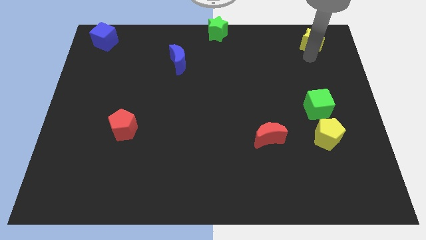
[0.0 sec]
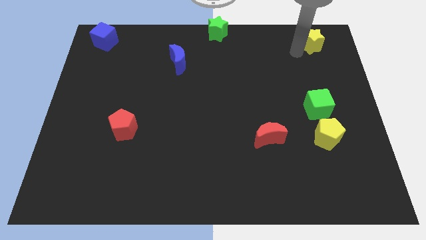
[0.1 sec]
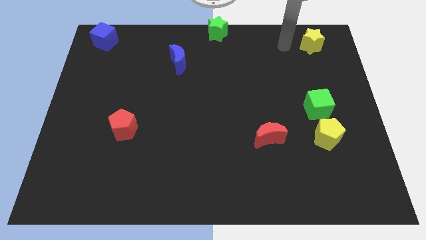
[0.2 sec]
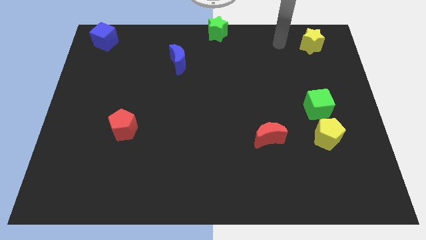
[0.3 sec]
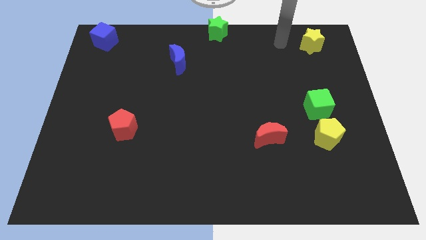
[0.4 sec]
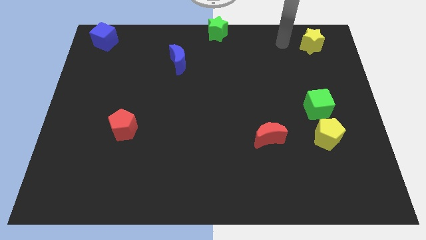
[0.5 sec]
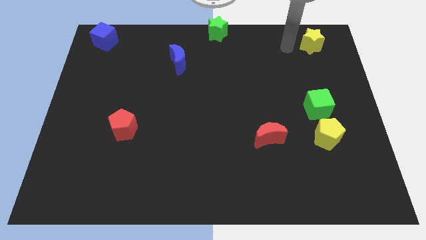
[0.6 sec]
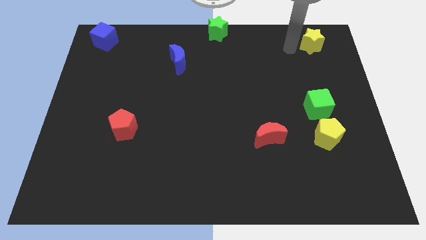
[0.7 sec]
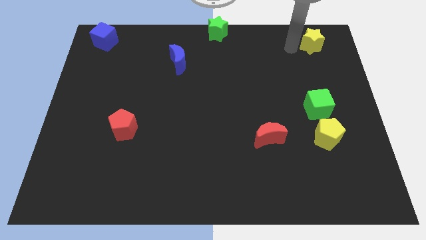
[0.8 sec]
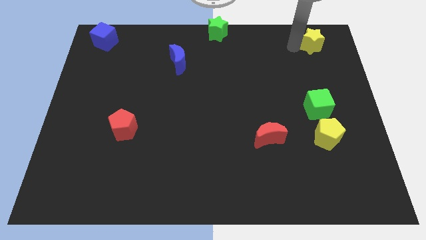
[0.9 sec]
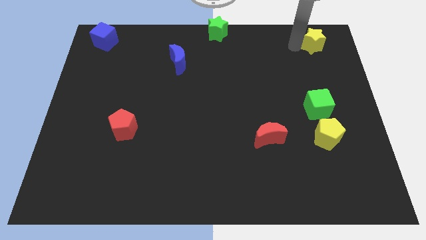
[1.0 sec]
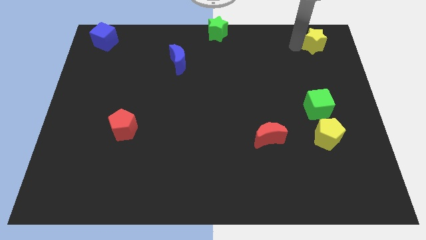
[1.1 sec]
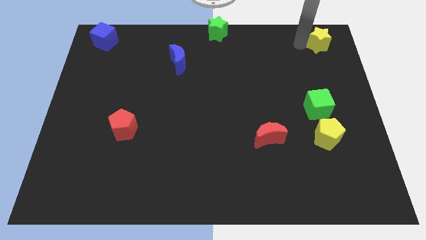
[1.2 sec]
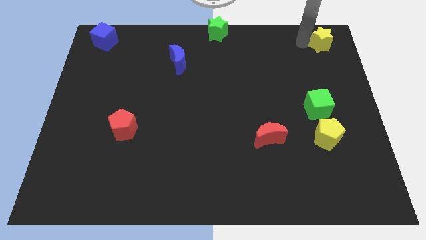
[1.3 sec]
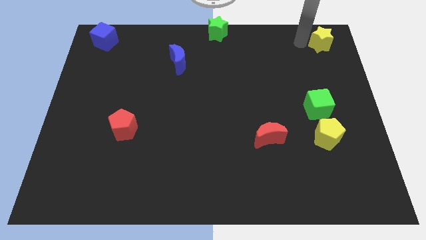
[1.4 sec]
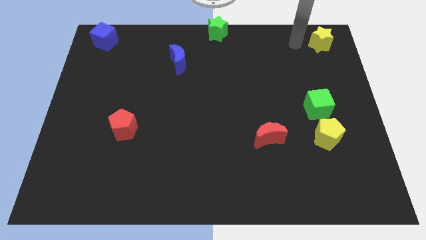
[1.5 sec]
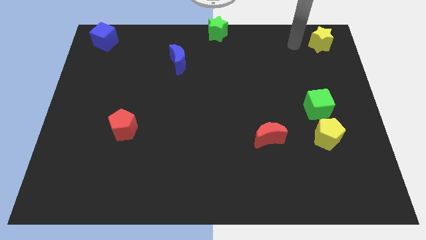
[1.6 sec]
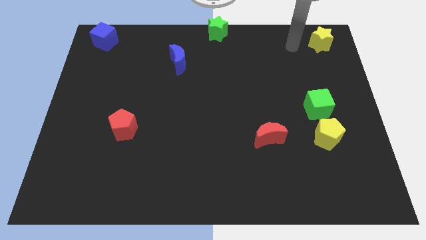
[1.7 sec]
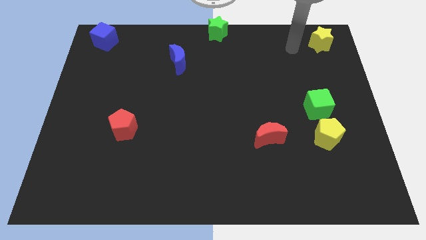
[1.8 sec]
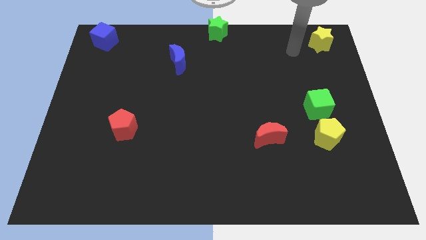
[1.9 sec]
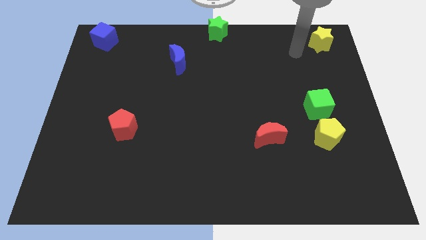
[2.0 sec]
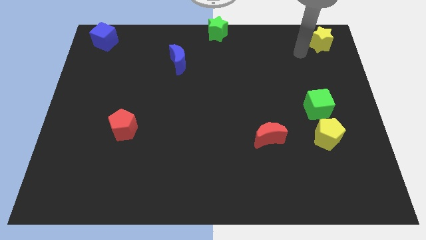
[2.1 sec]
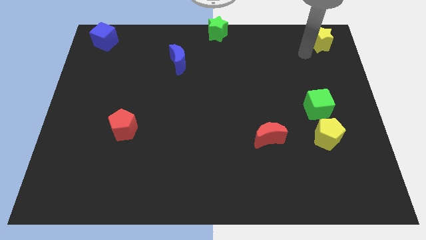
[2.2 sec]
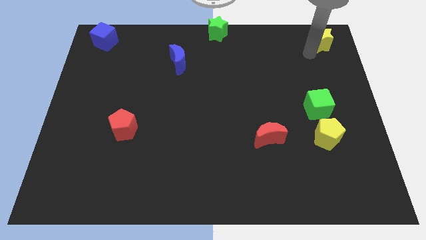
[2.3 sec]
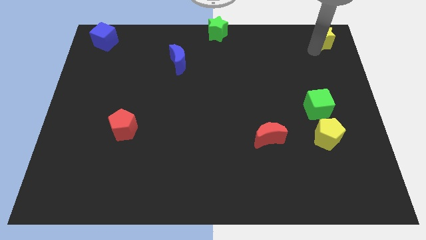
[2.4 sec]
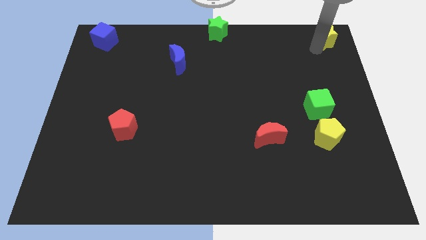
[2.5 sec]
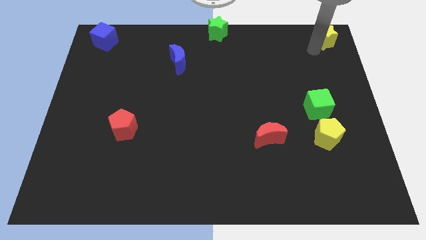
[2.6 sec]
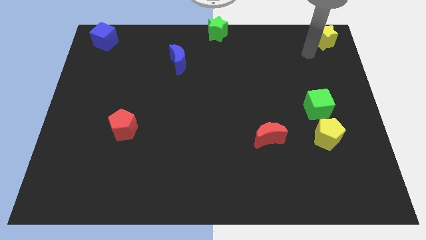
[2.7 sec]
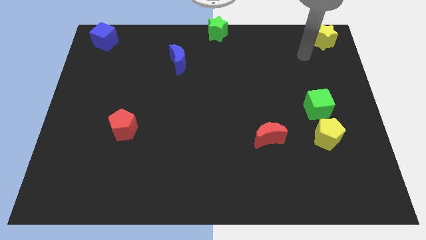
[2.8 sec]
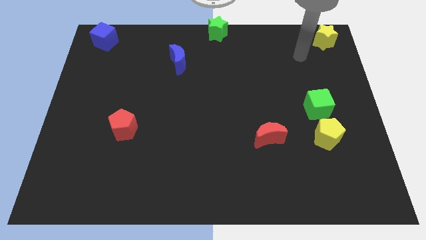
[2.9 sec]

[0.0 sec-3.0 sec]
push the yellow star to the top right corner

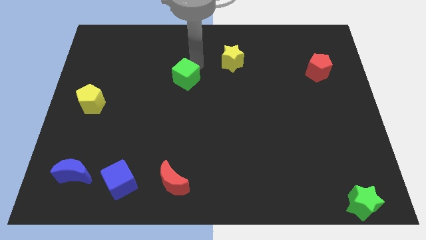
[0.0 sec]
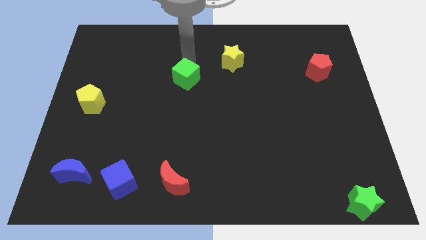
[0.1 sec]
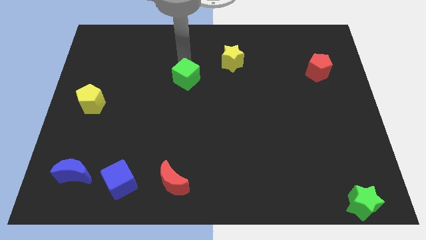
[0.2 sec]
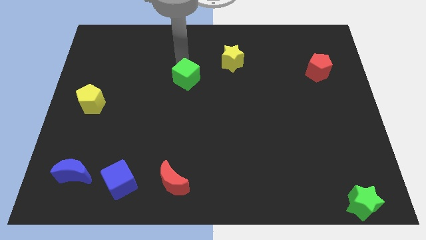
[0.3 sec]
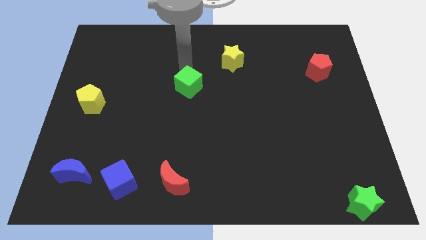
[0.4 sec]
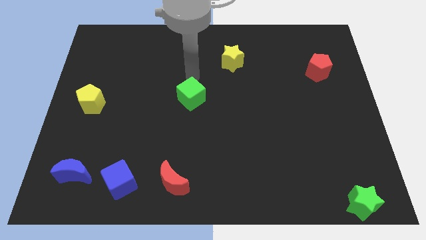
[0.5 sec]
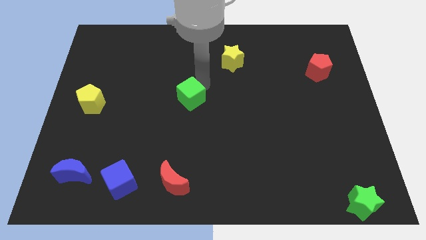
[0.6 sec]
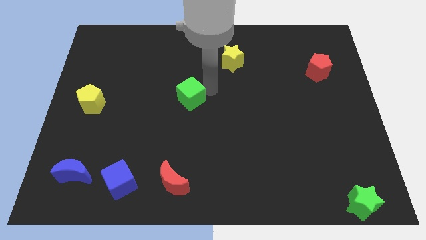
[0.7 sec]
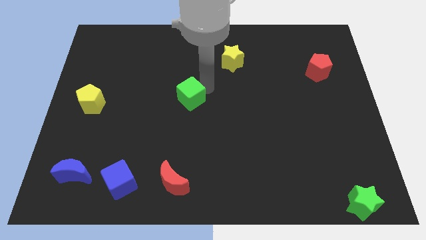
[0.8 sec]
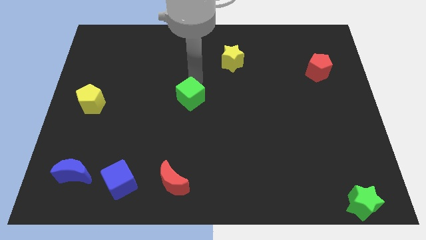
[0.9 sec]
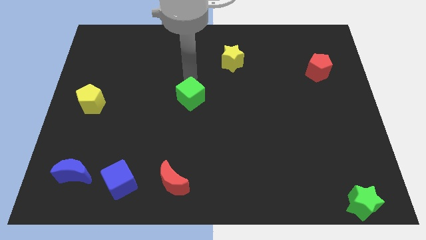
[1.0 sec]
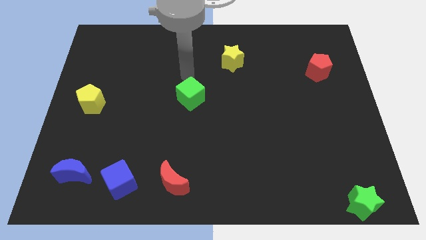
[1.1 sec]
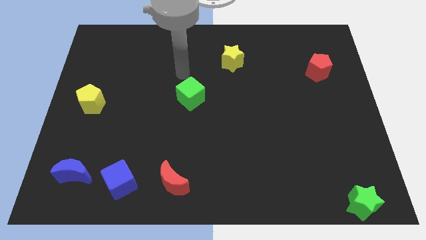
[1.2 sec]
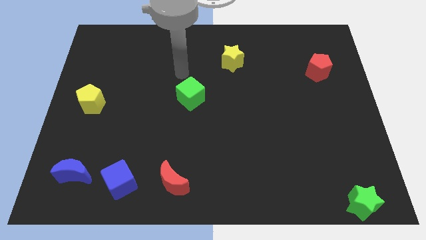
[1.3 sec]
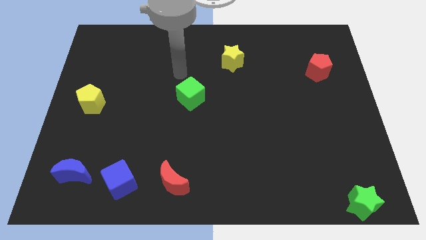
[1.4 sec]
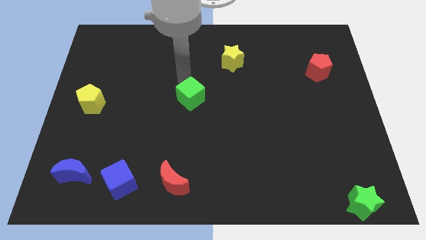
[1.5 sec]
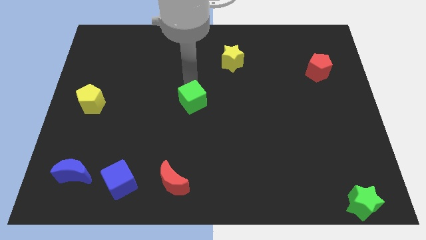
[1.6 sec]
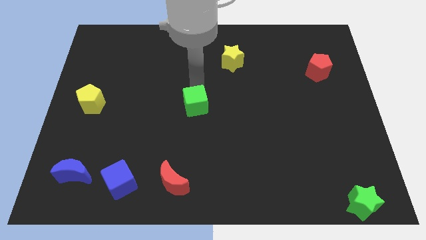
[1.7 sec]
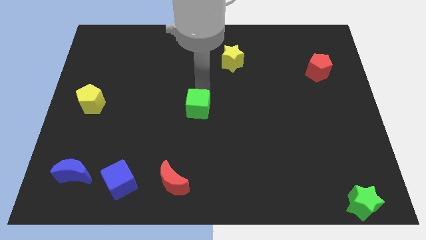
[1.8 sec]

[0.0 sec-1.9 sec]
move the green cube to the center of the board

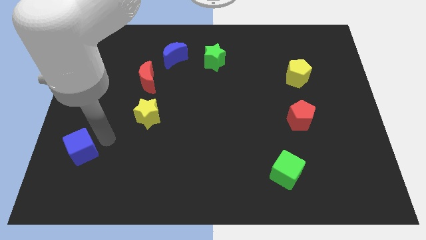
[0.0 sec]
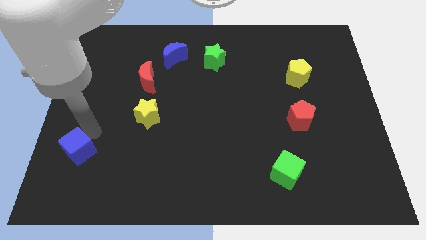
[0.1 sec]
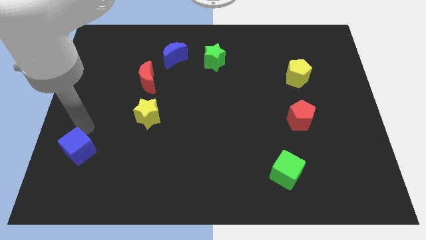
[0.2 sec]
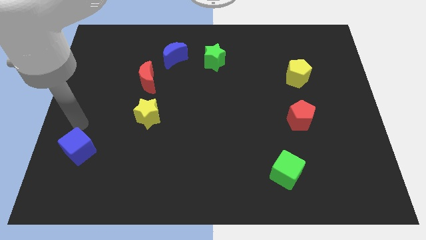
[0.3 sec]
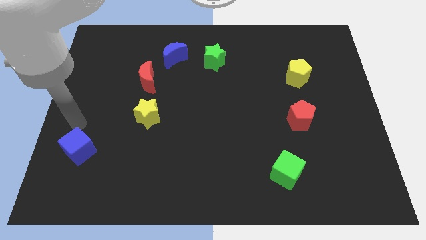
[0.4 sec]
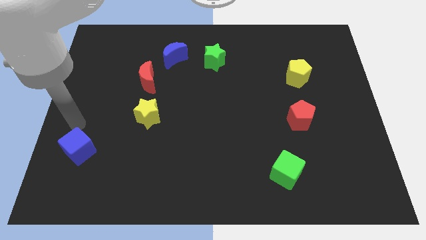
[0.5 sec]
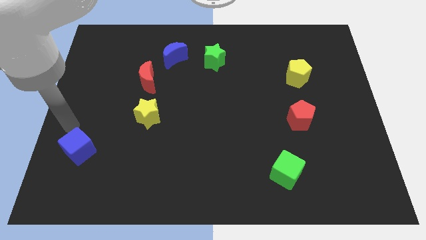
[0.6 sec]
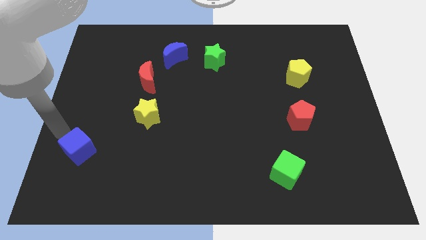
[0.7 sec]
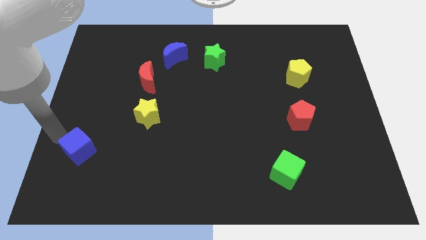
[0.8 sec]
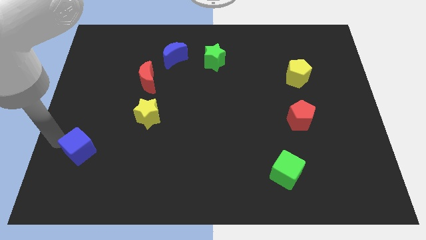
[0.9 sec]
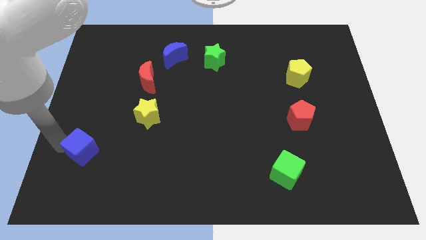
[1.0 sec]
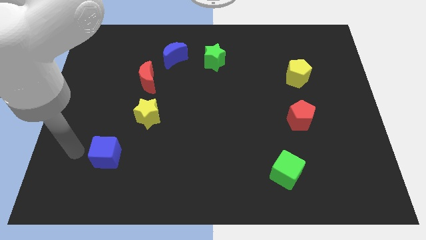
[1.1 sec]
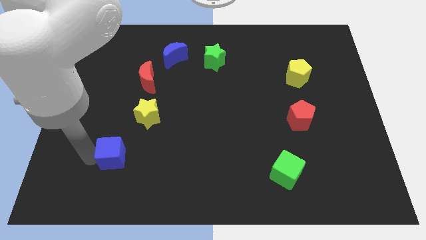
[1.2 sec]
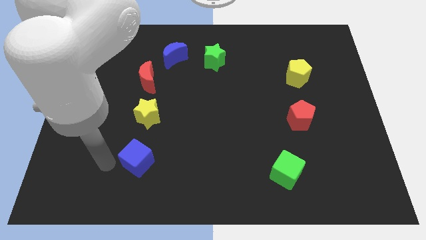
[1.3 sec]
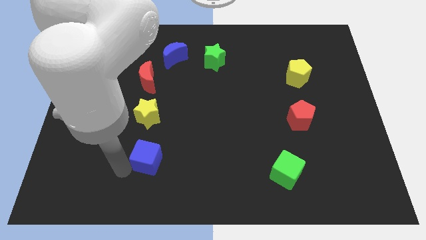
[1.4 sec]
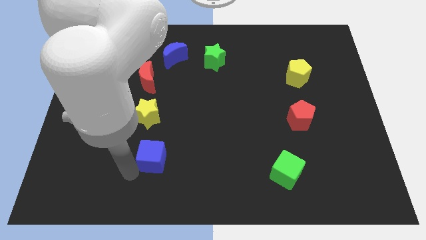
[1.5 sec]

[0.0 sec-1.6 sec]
place the blue cube horizontally to the left side of the green cube

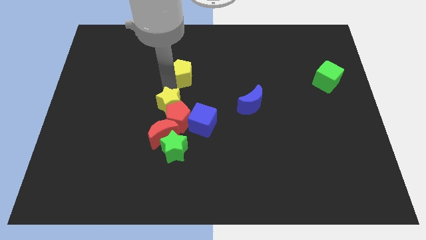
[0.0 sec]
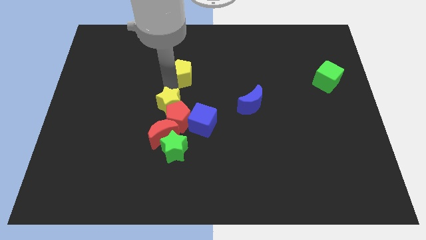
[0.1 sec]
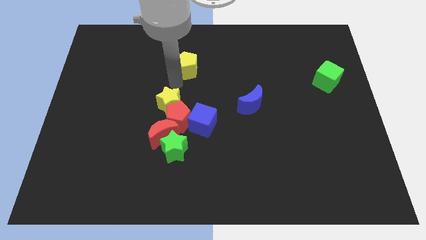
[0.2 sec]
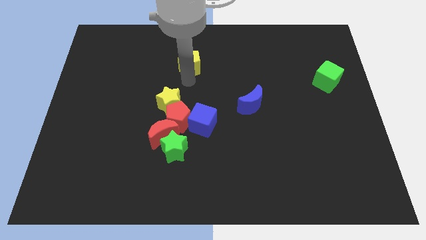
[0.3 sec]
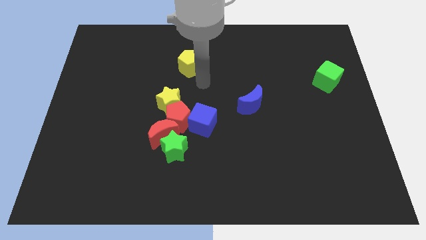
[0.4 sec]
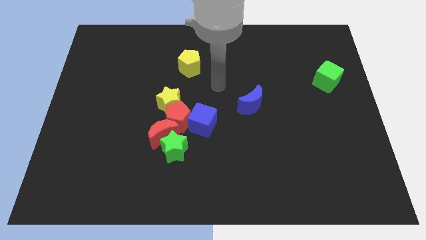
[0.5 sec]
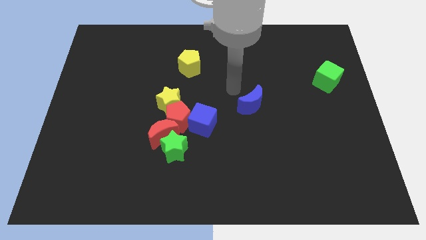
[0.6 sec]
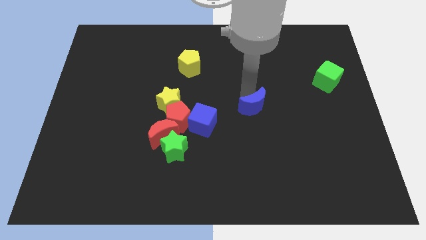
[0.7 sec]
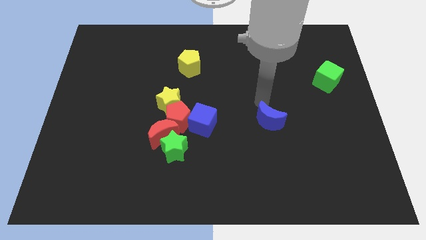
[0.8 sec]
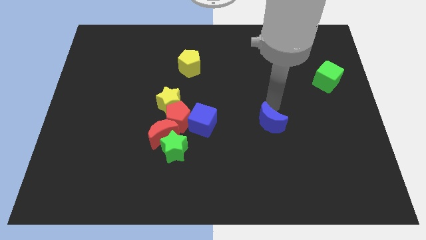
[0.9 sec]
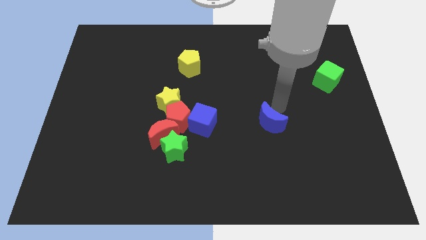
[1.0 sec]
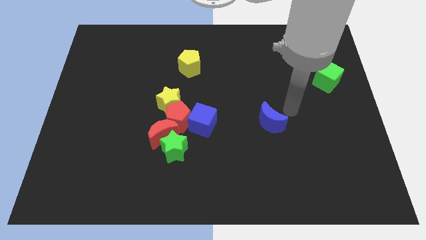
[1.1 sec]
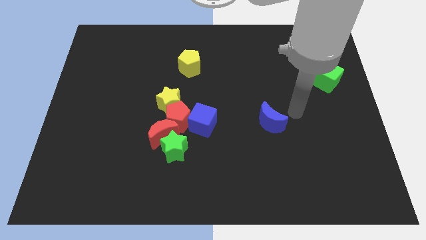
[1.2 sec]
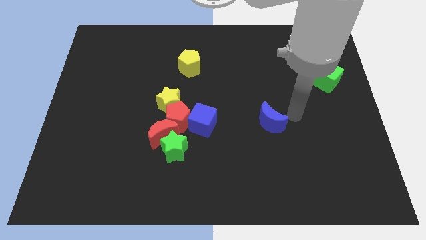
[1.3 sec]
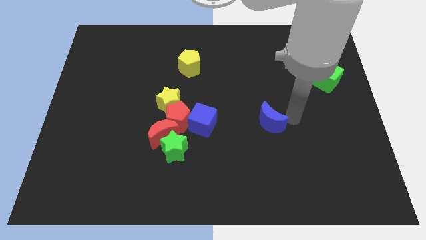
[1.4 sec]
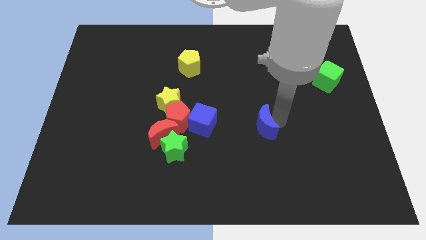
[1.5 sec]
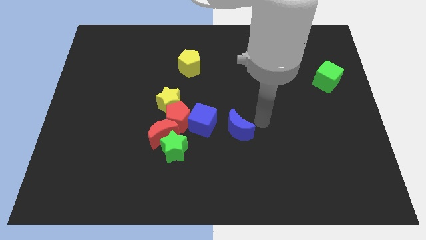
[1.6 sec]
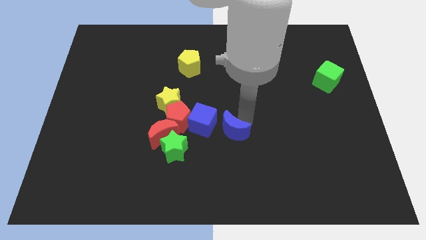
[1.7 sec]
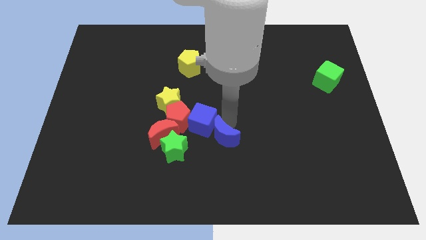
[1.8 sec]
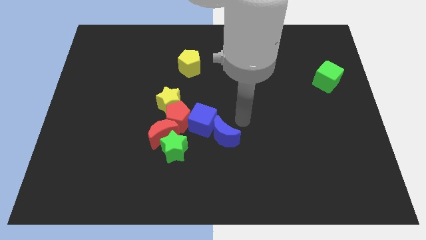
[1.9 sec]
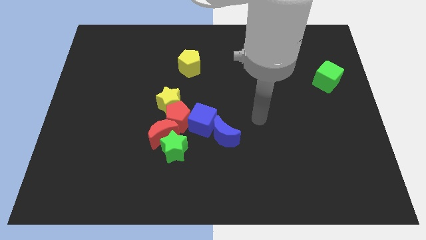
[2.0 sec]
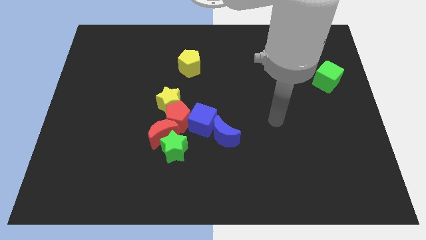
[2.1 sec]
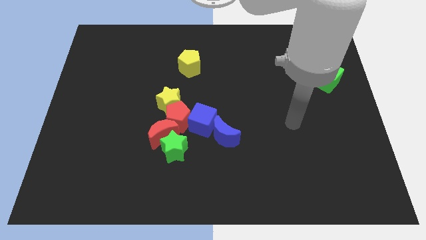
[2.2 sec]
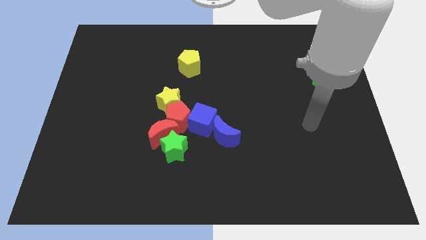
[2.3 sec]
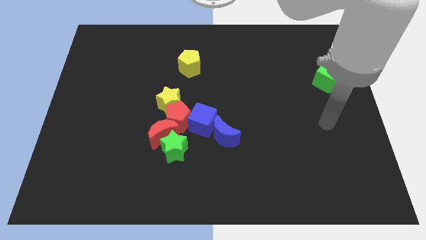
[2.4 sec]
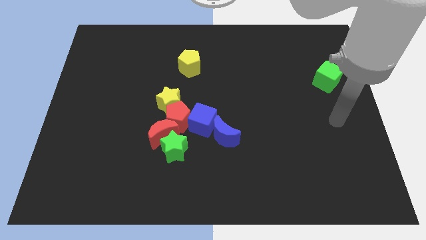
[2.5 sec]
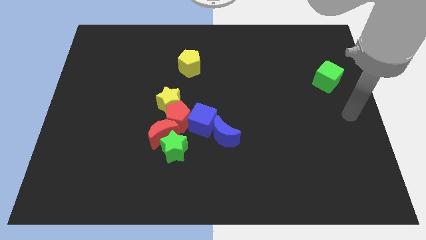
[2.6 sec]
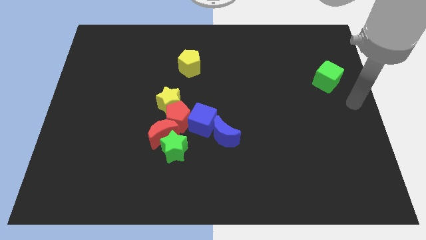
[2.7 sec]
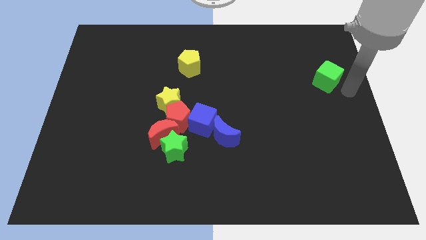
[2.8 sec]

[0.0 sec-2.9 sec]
place the blue crescent to the right side of blue cube
